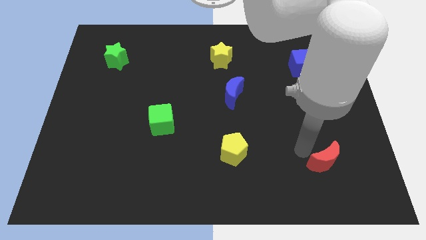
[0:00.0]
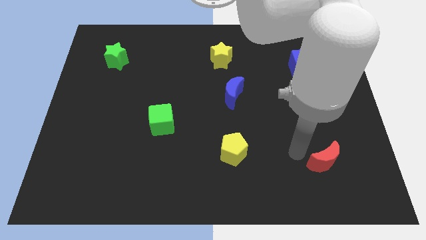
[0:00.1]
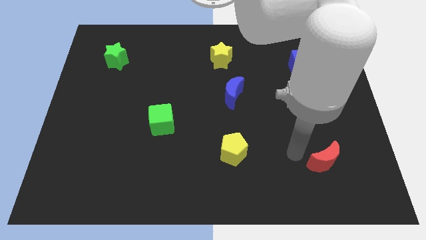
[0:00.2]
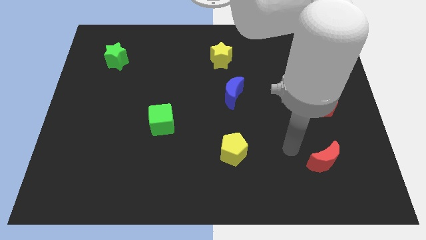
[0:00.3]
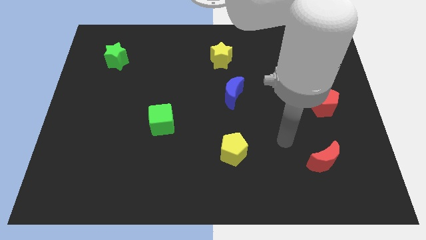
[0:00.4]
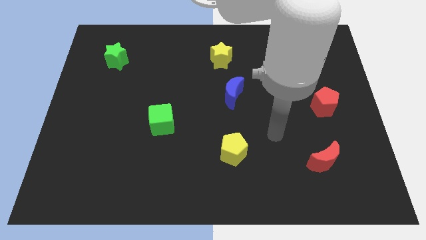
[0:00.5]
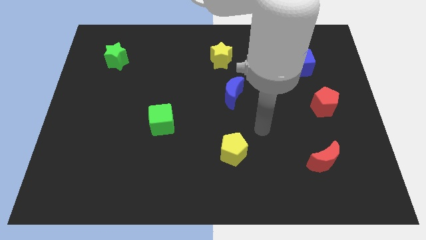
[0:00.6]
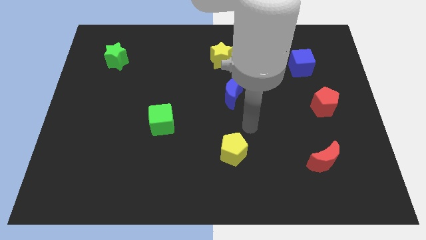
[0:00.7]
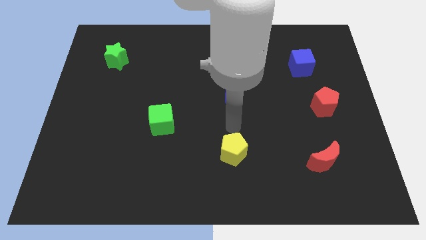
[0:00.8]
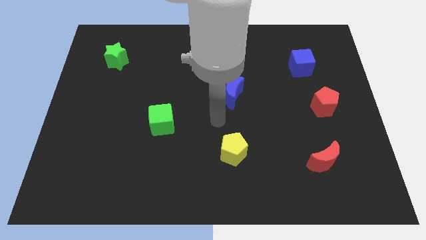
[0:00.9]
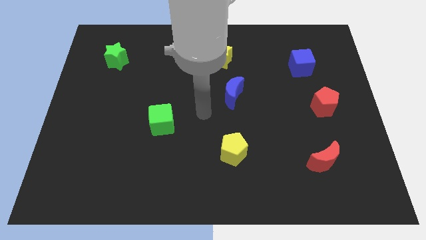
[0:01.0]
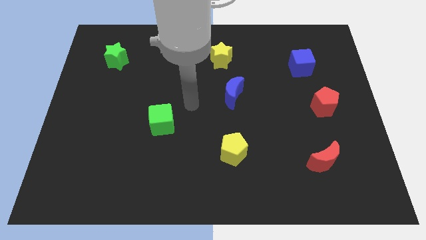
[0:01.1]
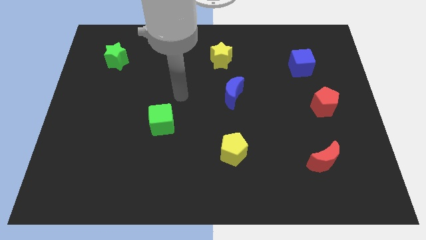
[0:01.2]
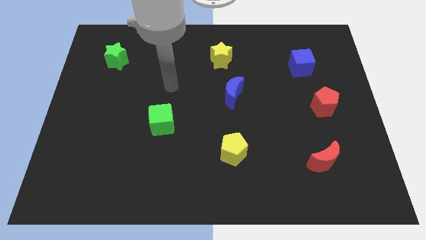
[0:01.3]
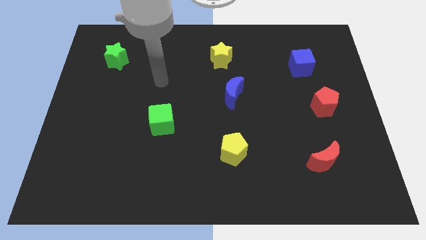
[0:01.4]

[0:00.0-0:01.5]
point your arm at the top of the green cube

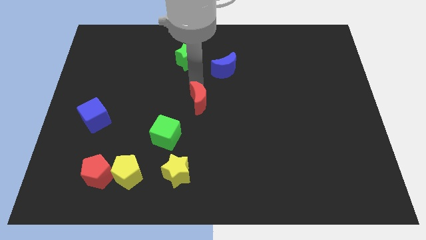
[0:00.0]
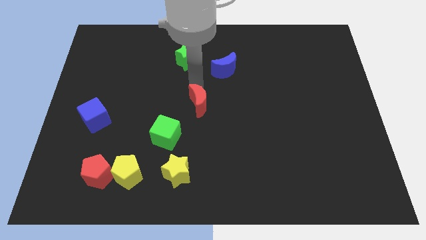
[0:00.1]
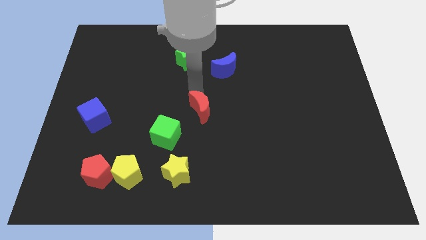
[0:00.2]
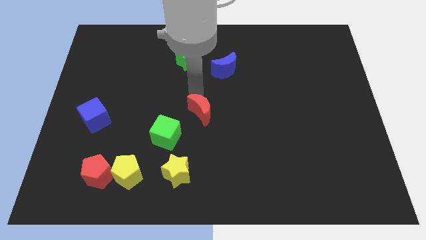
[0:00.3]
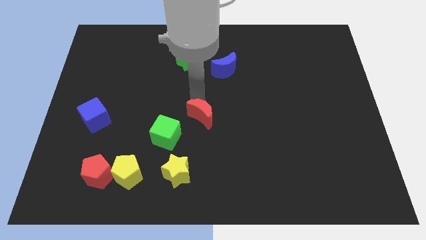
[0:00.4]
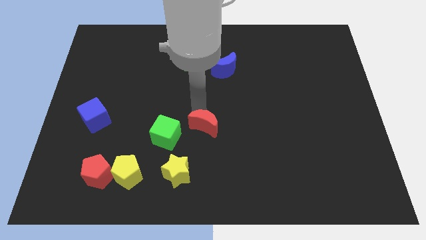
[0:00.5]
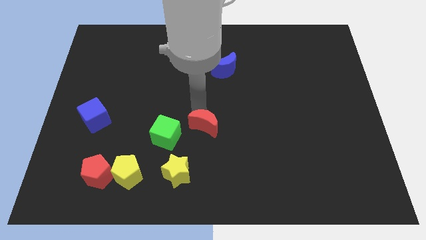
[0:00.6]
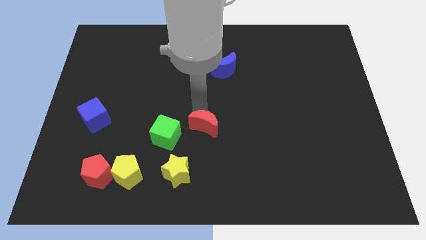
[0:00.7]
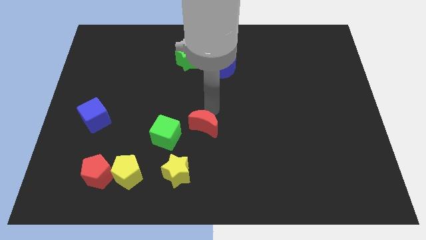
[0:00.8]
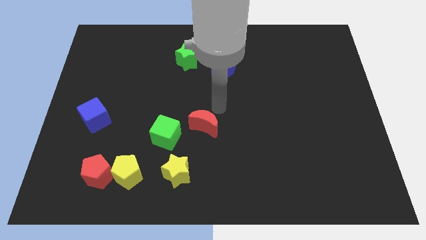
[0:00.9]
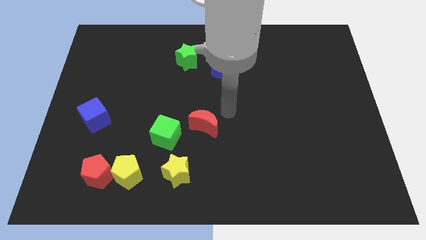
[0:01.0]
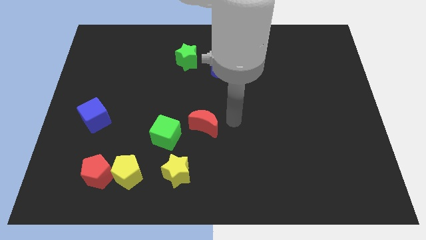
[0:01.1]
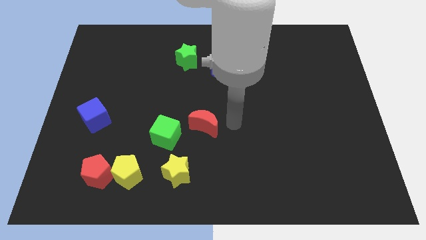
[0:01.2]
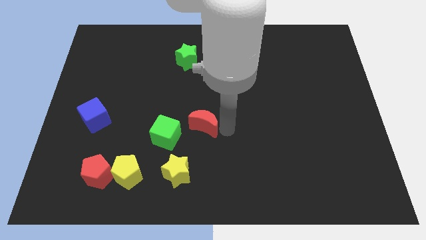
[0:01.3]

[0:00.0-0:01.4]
move the red crescent to the center of the board

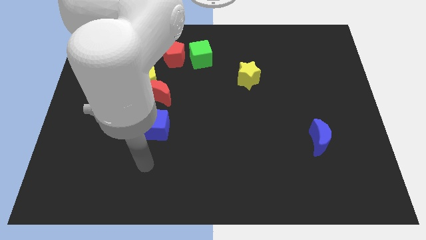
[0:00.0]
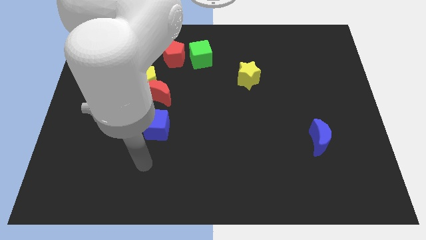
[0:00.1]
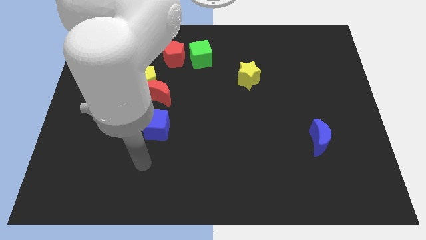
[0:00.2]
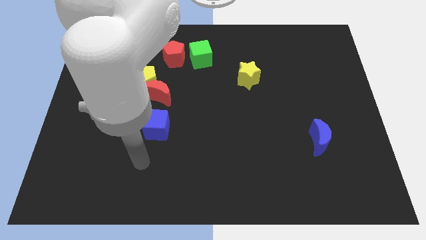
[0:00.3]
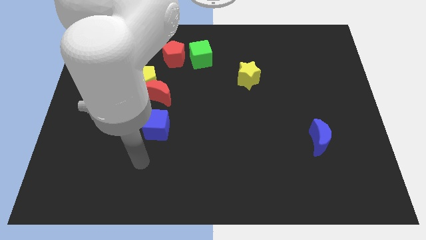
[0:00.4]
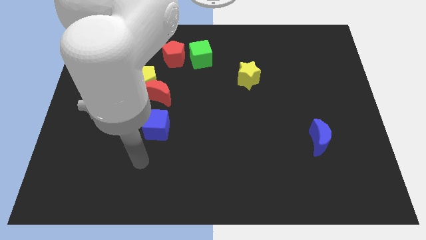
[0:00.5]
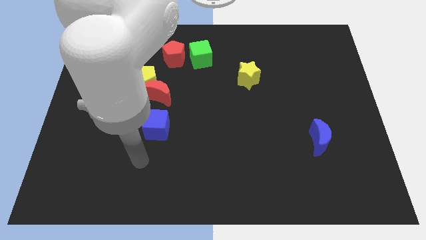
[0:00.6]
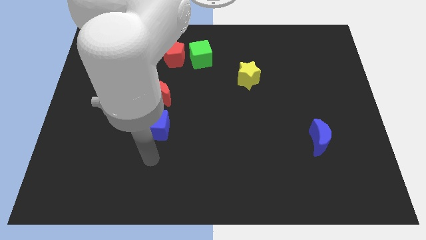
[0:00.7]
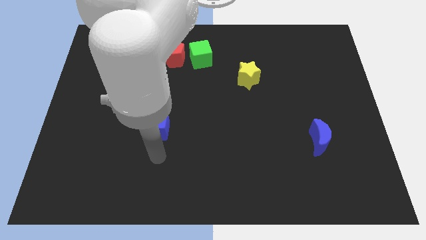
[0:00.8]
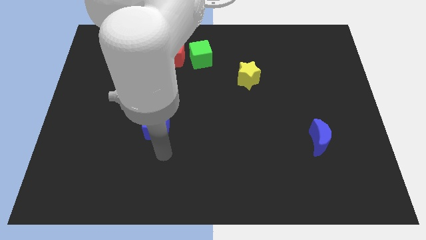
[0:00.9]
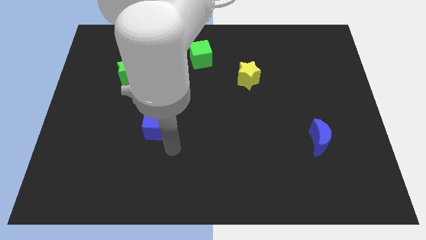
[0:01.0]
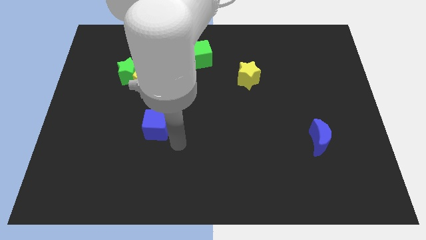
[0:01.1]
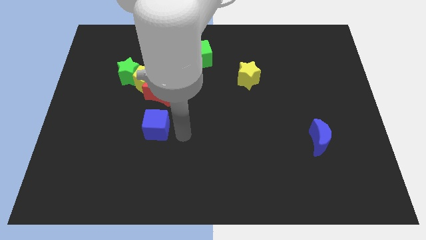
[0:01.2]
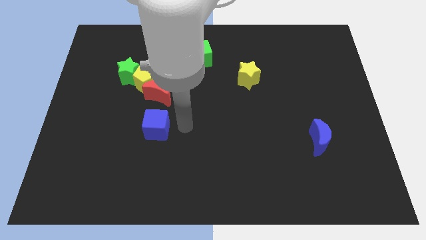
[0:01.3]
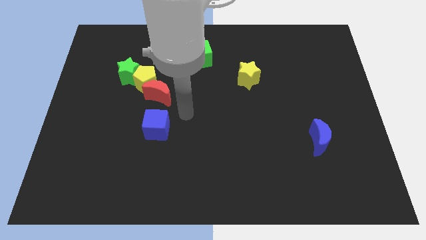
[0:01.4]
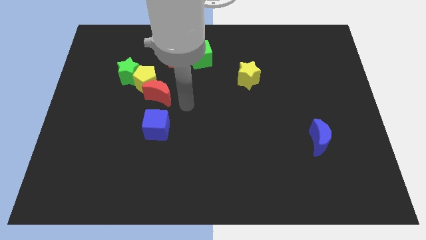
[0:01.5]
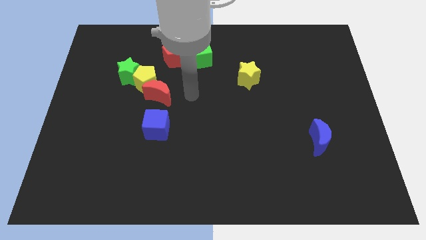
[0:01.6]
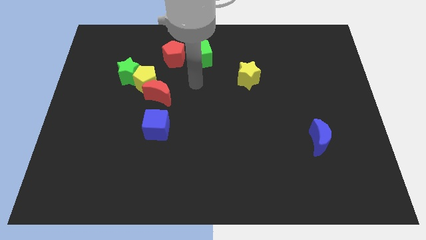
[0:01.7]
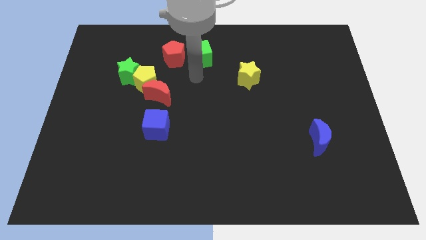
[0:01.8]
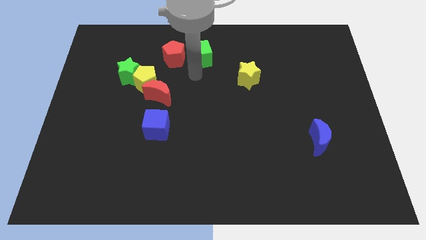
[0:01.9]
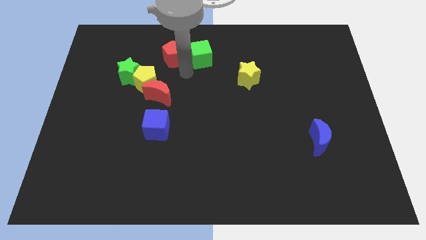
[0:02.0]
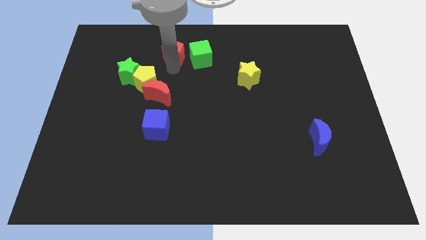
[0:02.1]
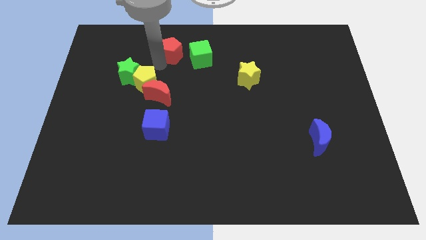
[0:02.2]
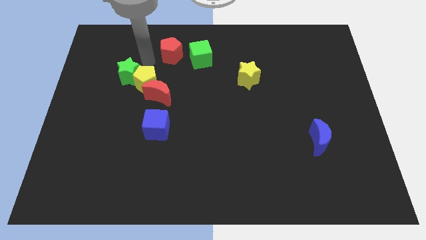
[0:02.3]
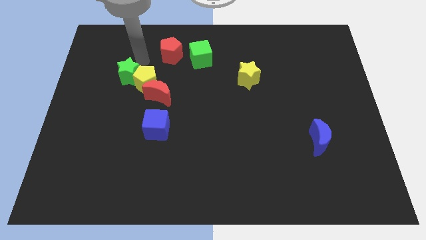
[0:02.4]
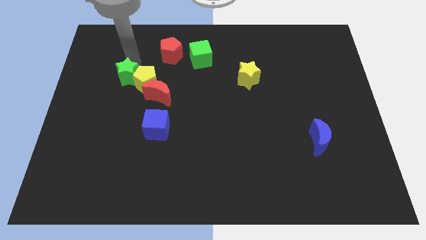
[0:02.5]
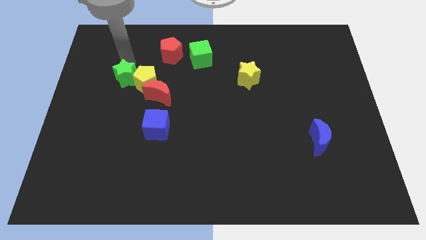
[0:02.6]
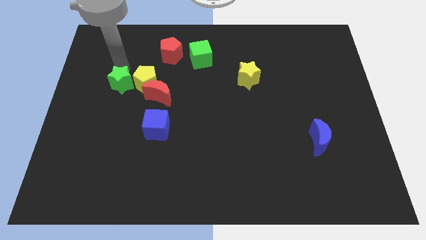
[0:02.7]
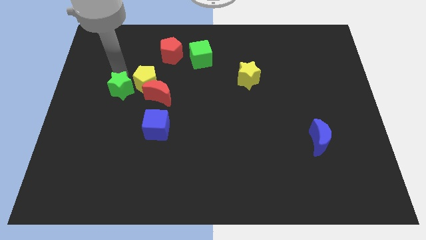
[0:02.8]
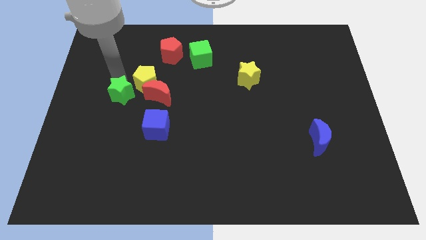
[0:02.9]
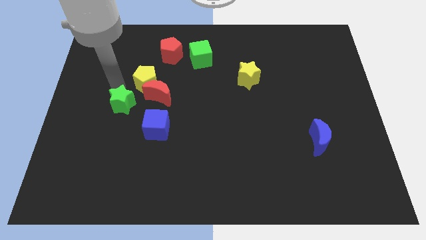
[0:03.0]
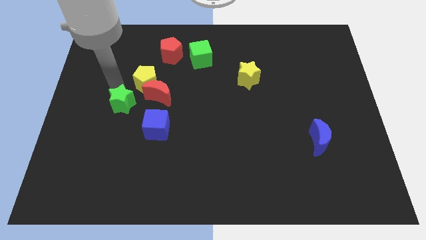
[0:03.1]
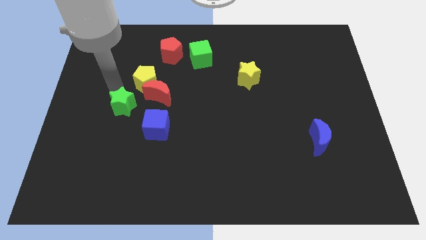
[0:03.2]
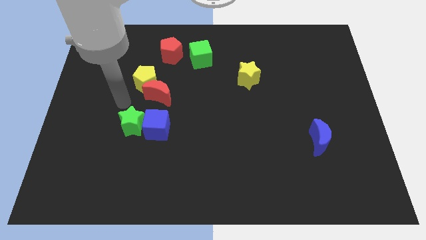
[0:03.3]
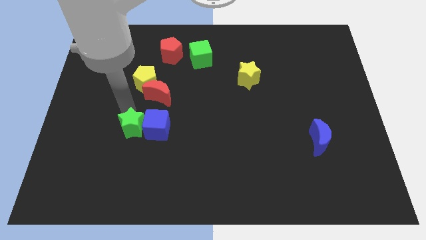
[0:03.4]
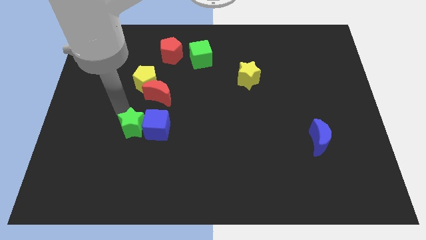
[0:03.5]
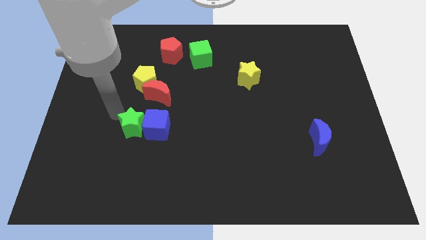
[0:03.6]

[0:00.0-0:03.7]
push the green star to the left side of the blue cube

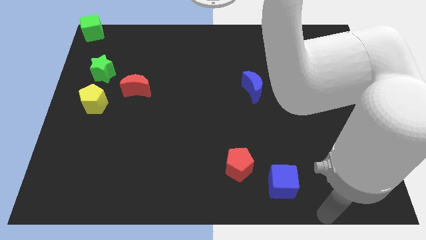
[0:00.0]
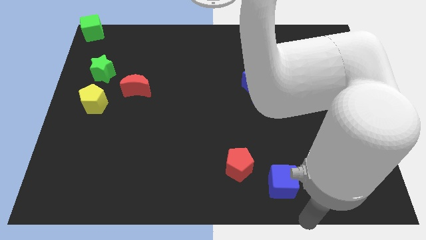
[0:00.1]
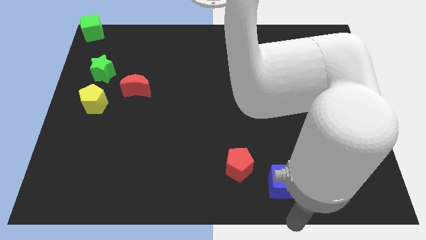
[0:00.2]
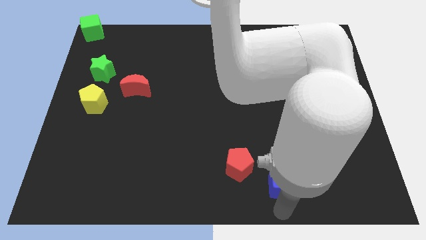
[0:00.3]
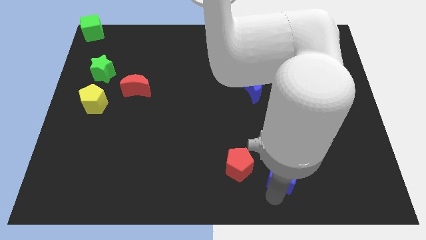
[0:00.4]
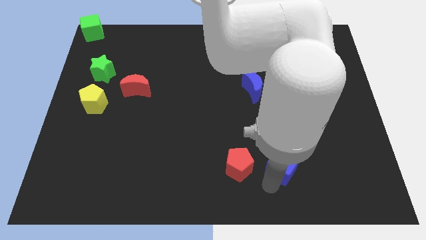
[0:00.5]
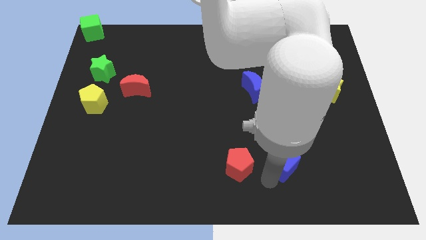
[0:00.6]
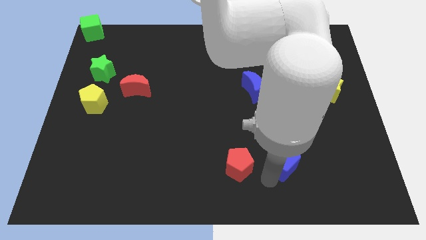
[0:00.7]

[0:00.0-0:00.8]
place the blue cube right to the red pentagon

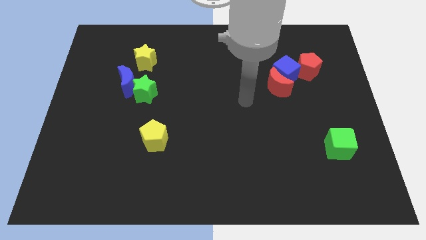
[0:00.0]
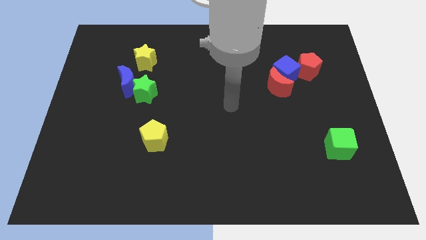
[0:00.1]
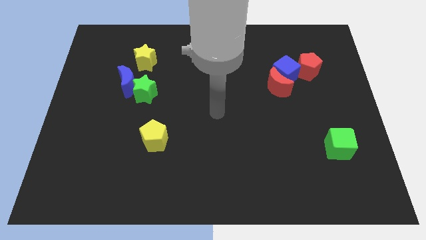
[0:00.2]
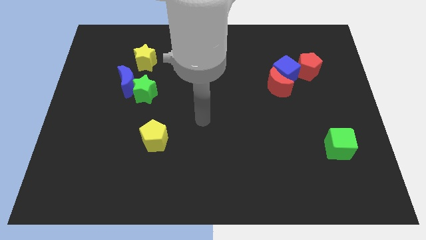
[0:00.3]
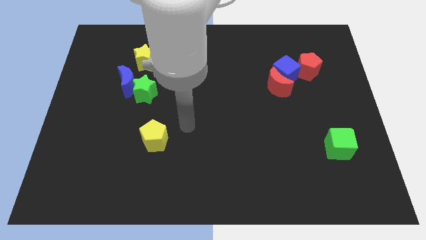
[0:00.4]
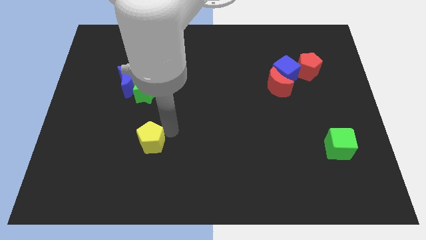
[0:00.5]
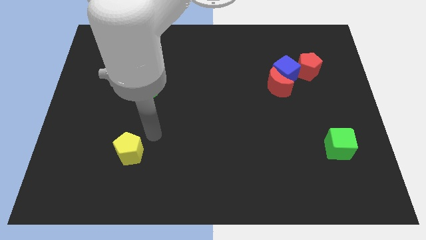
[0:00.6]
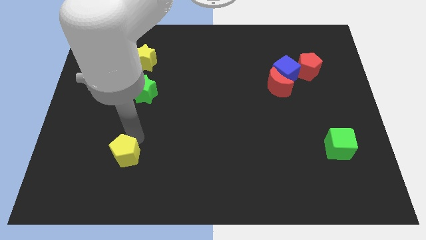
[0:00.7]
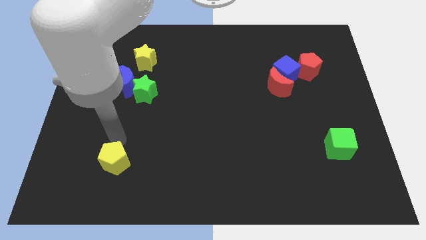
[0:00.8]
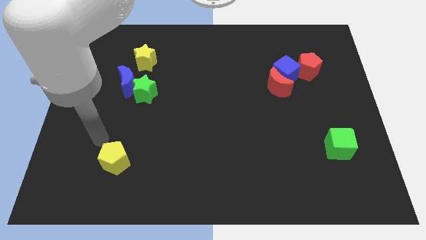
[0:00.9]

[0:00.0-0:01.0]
move the yellow pentagon slightly towards the bottom left side

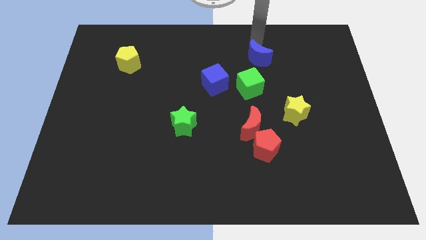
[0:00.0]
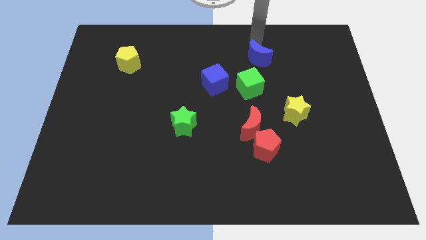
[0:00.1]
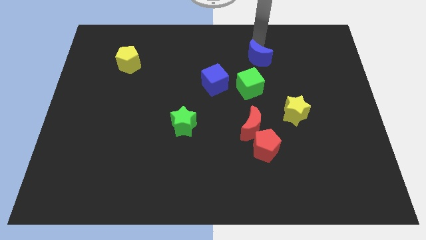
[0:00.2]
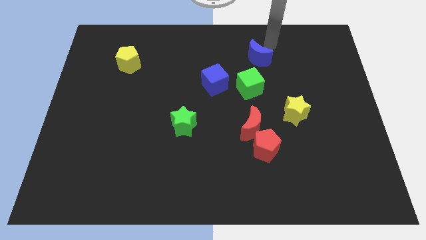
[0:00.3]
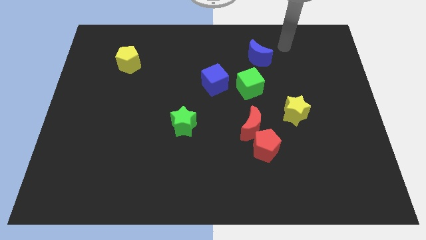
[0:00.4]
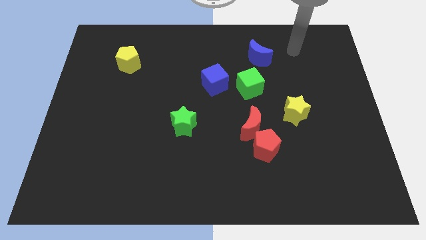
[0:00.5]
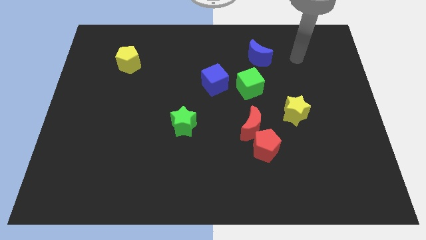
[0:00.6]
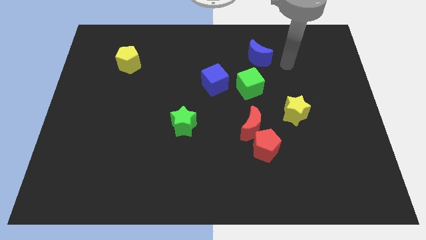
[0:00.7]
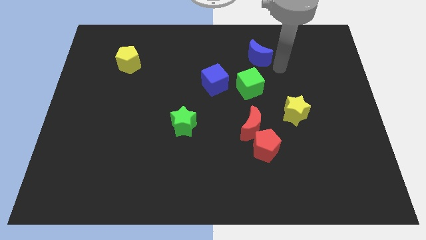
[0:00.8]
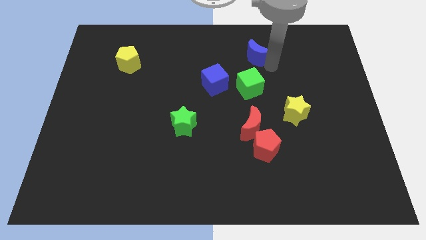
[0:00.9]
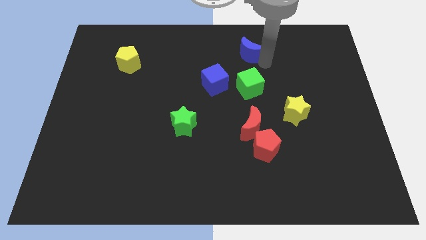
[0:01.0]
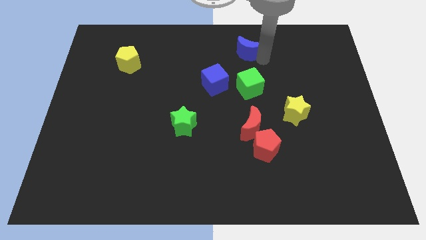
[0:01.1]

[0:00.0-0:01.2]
place the blue moon above the green cube
